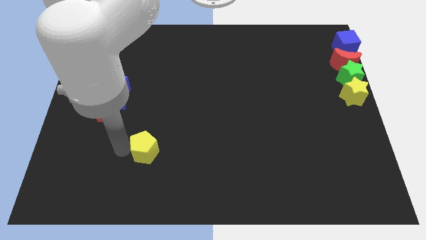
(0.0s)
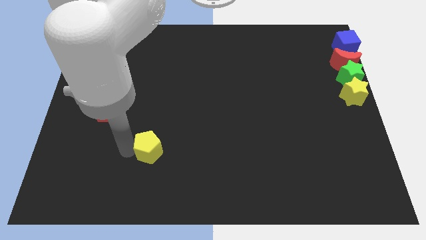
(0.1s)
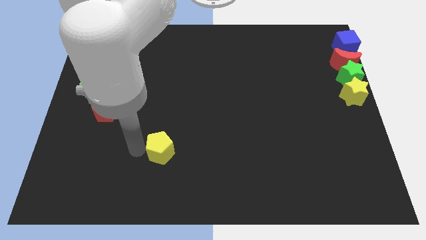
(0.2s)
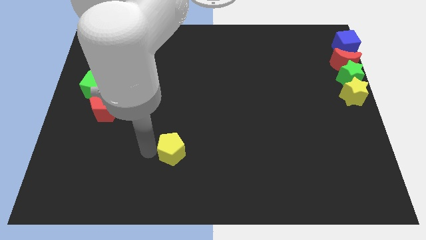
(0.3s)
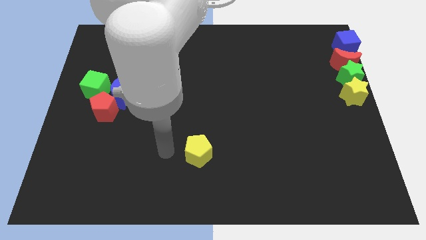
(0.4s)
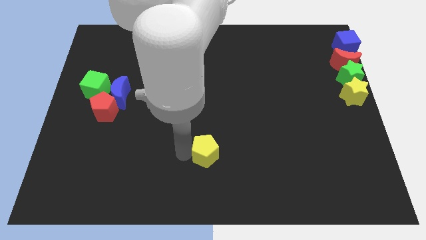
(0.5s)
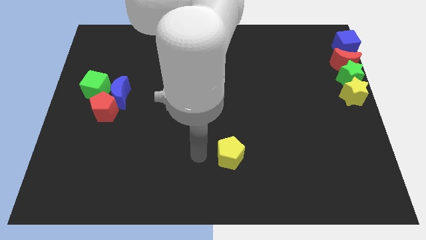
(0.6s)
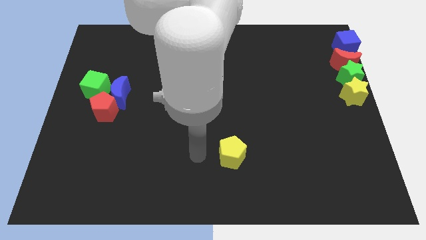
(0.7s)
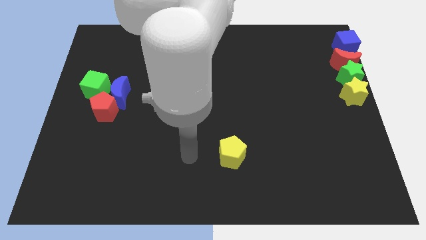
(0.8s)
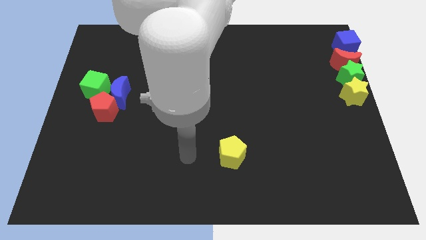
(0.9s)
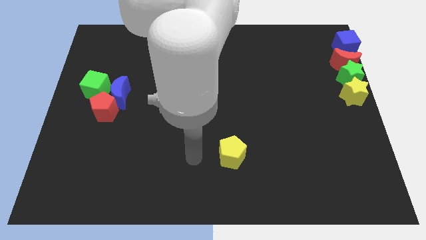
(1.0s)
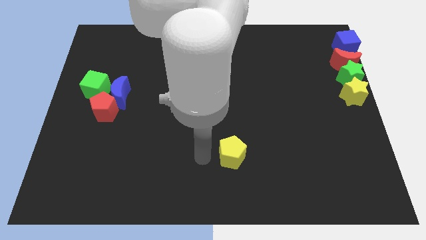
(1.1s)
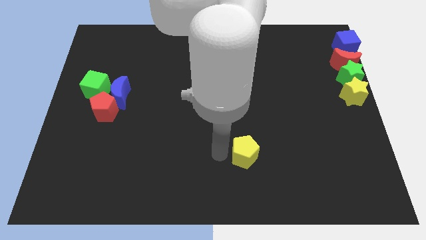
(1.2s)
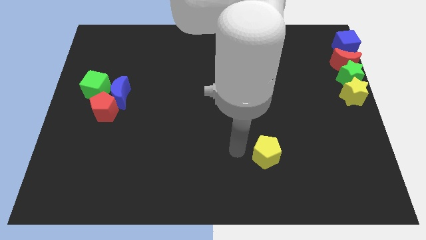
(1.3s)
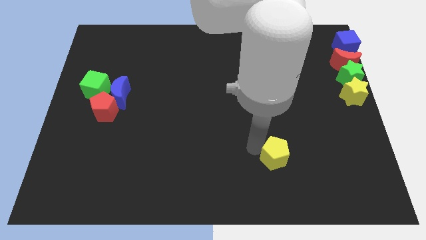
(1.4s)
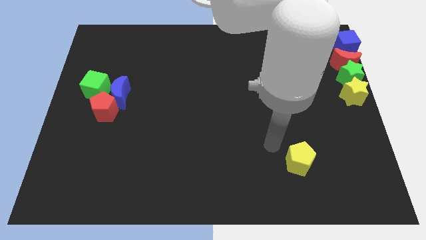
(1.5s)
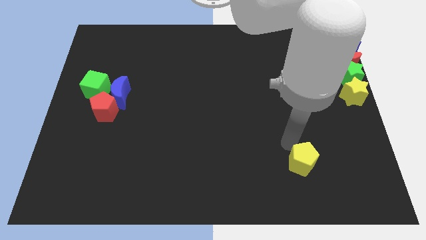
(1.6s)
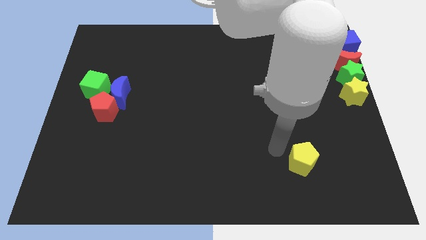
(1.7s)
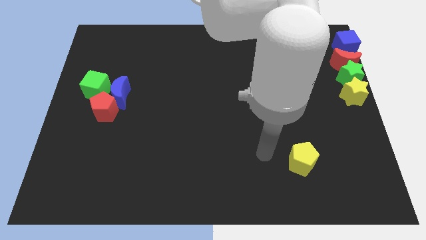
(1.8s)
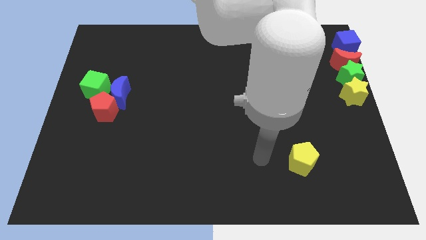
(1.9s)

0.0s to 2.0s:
drag yellow pentagon towards right side of the board

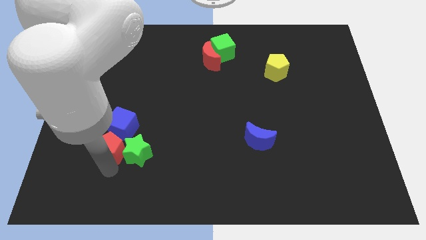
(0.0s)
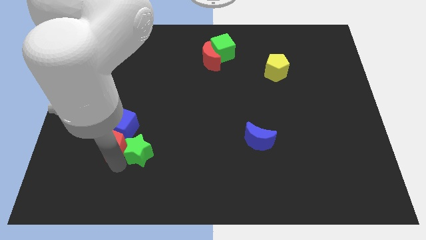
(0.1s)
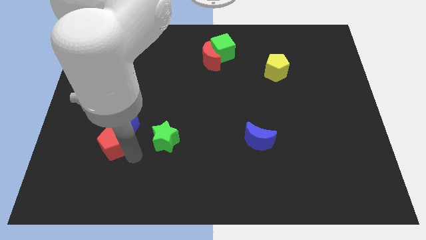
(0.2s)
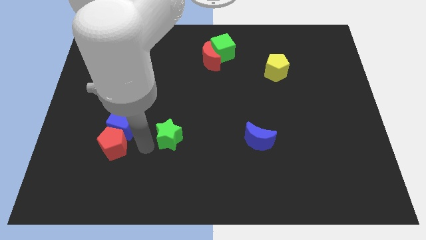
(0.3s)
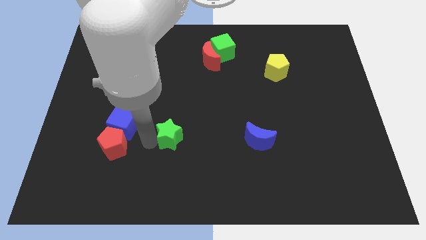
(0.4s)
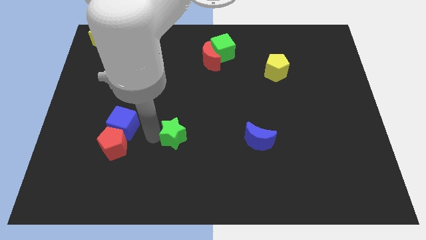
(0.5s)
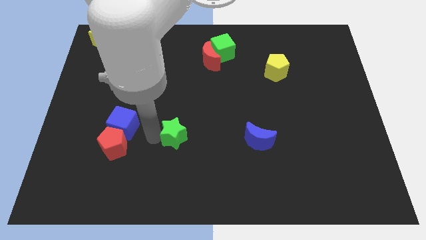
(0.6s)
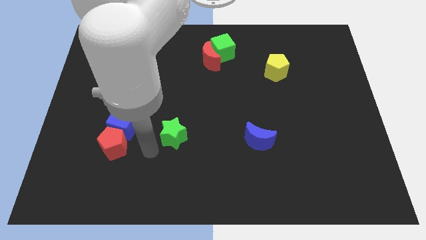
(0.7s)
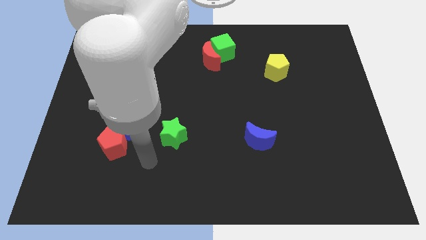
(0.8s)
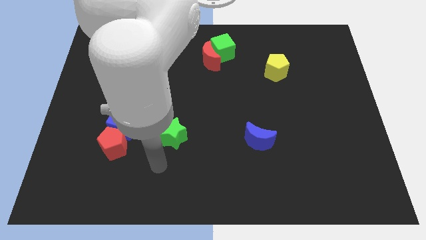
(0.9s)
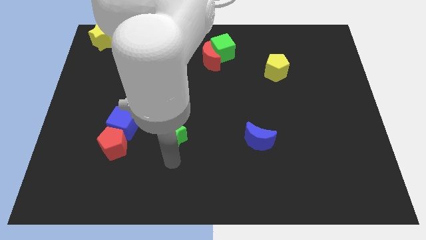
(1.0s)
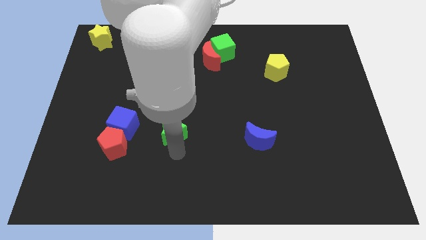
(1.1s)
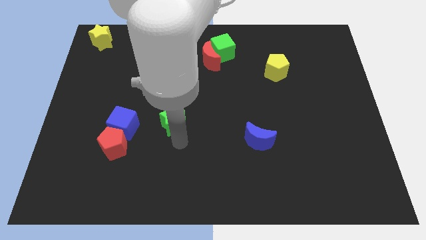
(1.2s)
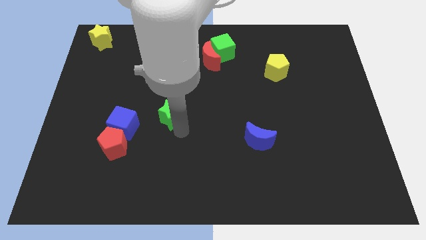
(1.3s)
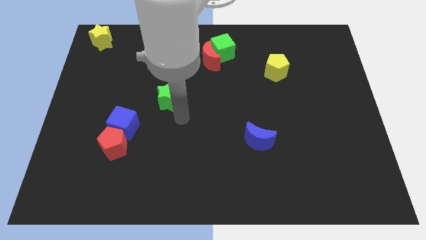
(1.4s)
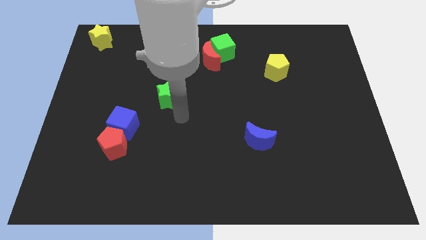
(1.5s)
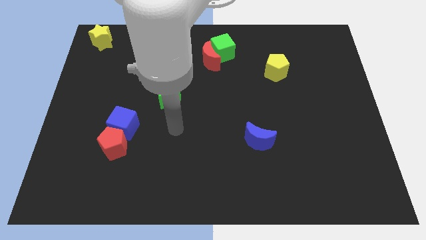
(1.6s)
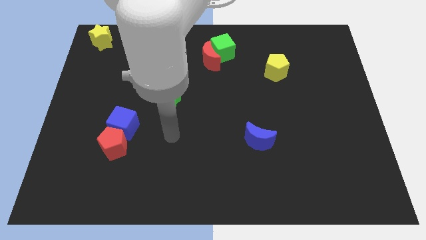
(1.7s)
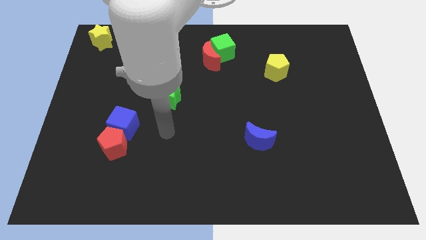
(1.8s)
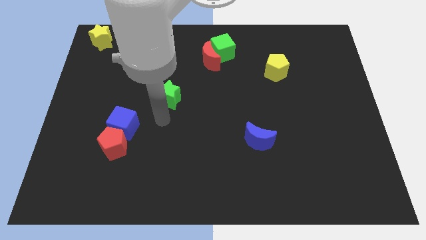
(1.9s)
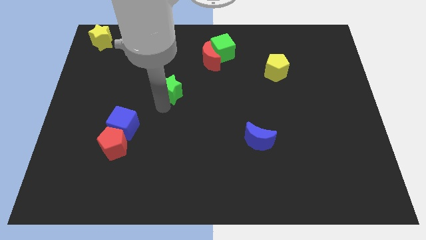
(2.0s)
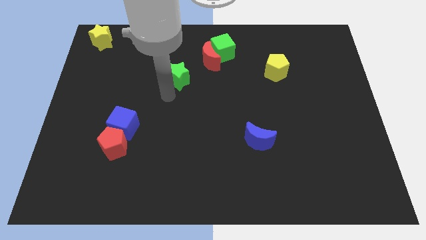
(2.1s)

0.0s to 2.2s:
move the green star between red moon and blue cube

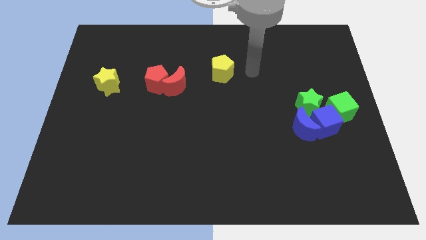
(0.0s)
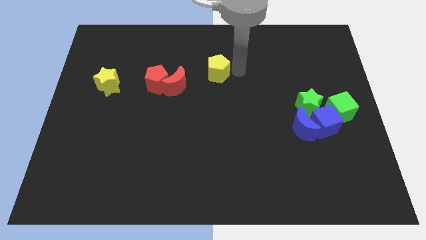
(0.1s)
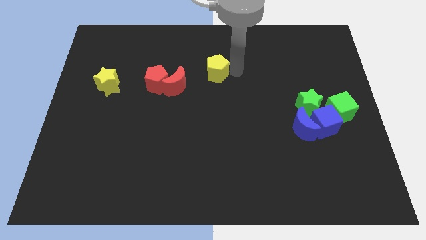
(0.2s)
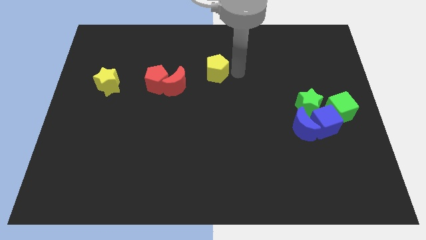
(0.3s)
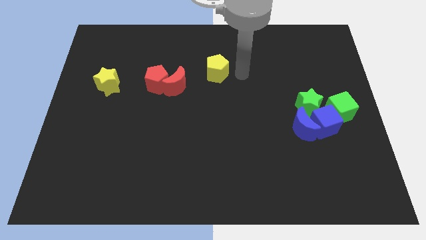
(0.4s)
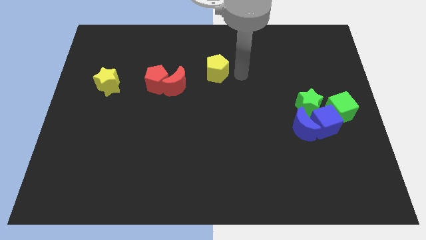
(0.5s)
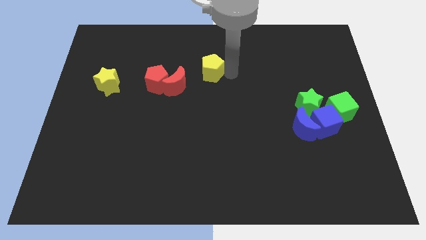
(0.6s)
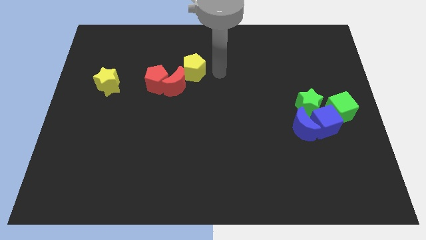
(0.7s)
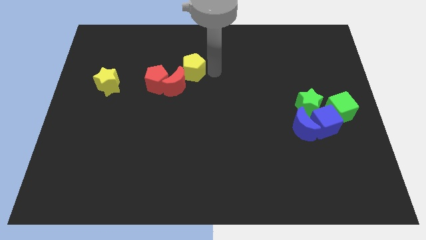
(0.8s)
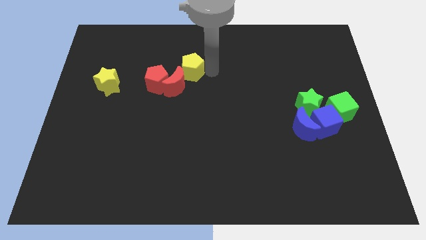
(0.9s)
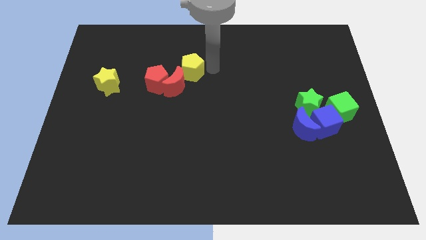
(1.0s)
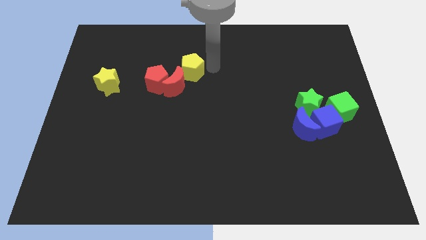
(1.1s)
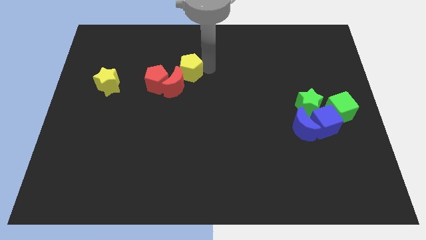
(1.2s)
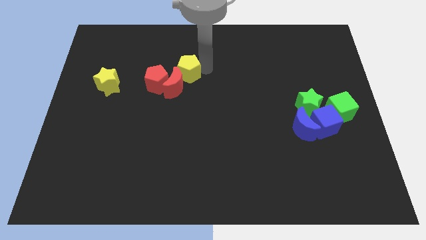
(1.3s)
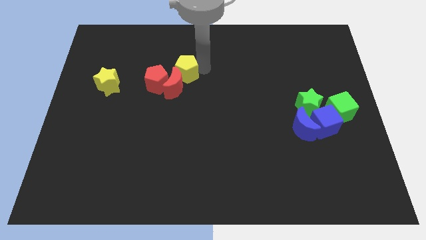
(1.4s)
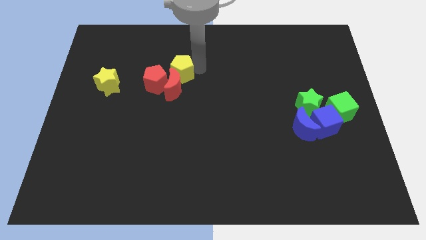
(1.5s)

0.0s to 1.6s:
place the yellow pentagon above the red moon

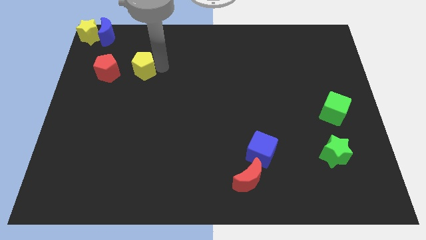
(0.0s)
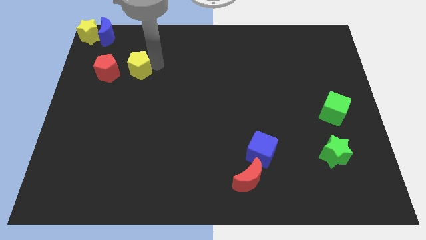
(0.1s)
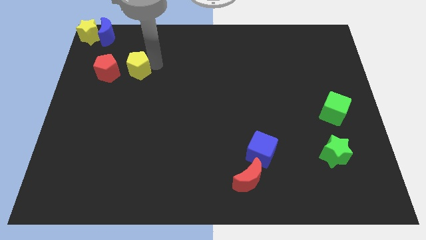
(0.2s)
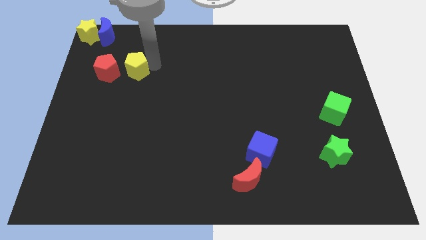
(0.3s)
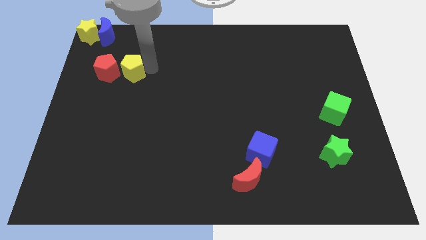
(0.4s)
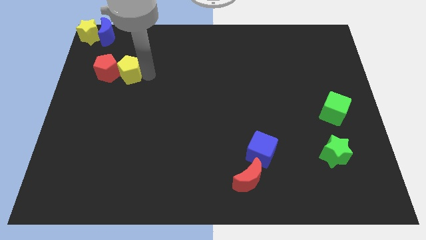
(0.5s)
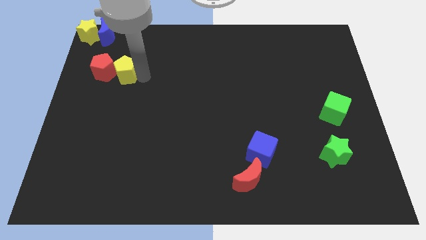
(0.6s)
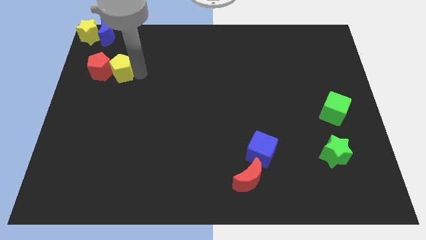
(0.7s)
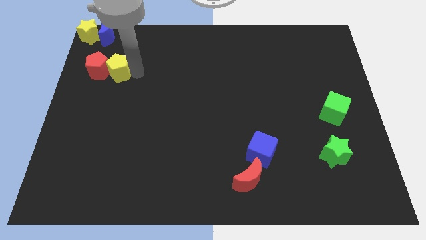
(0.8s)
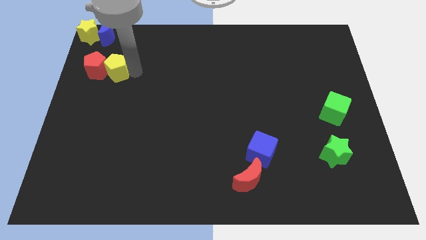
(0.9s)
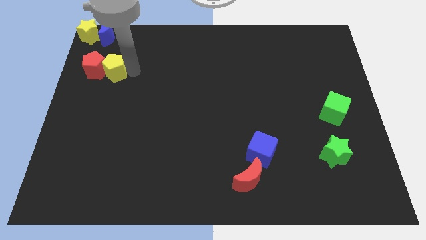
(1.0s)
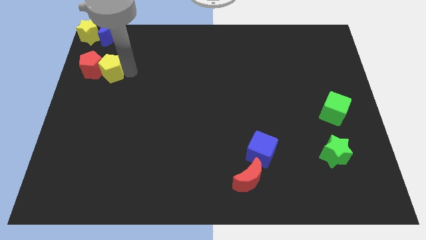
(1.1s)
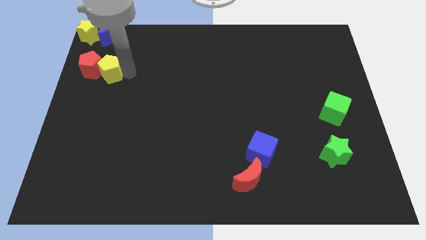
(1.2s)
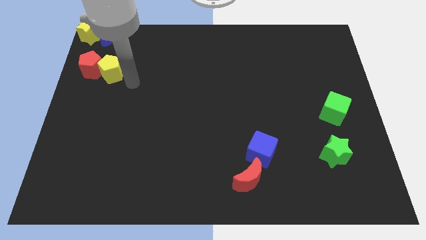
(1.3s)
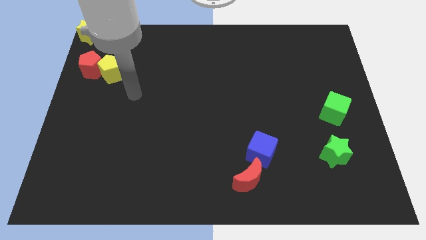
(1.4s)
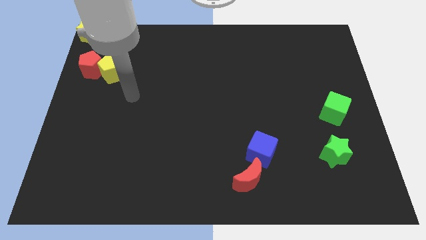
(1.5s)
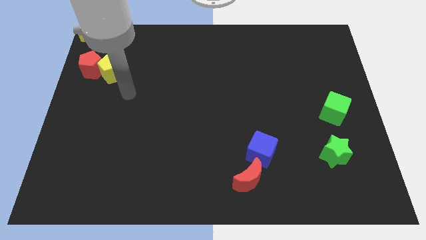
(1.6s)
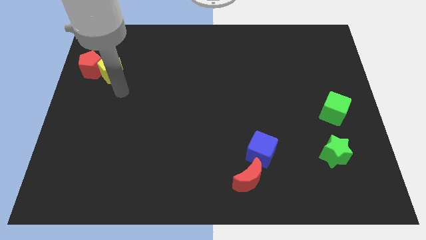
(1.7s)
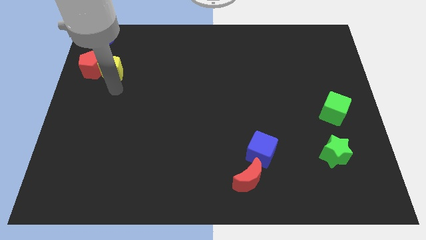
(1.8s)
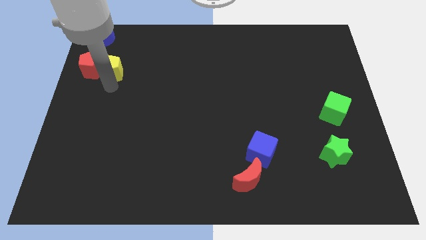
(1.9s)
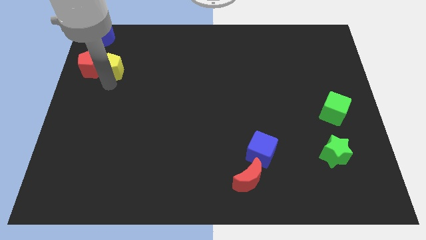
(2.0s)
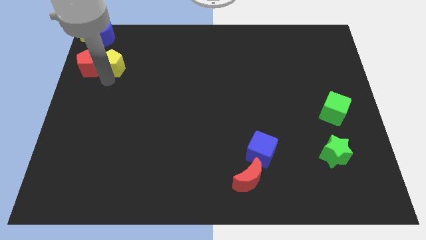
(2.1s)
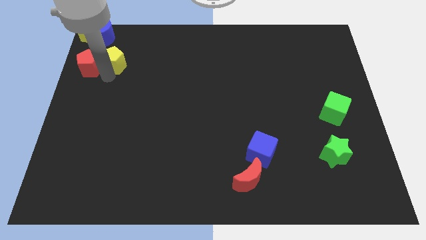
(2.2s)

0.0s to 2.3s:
push the yellow pentagon into the red pentagon

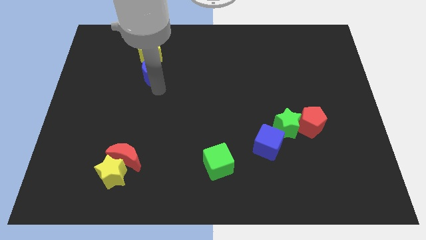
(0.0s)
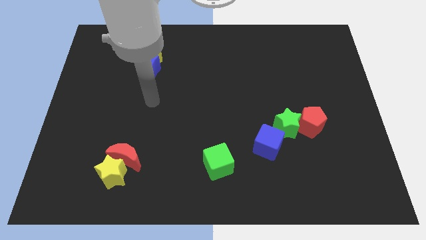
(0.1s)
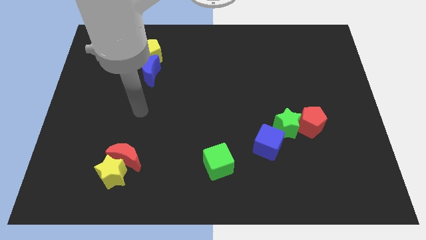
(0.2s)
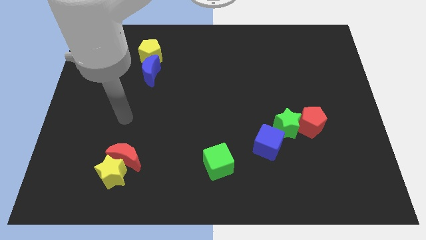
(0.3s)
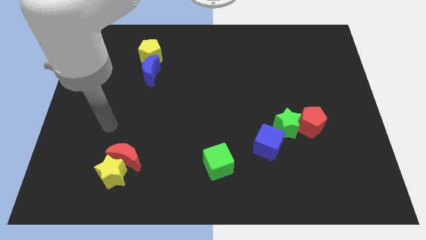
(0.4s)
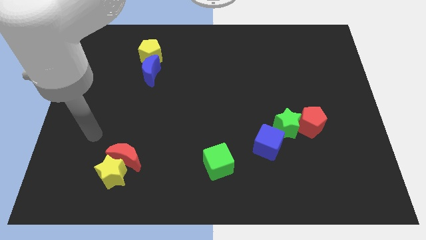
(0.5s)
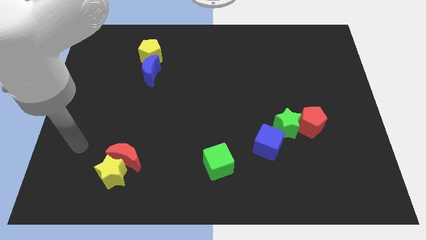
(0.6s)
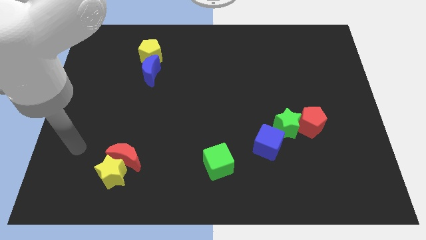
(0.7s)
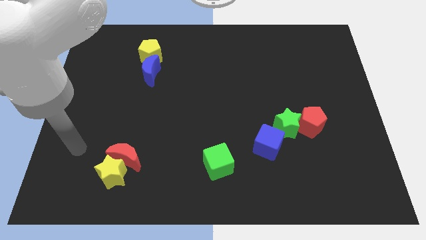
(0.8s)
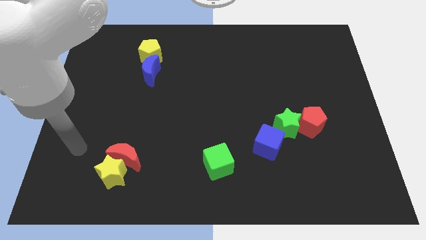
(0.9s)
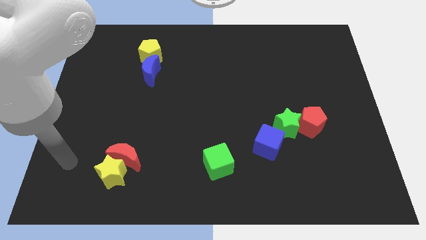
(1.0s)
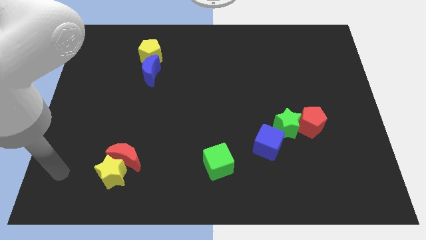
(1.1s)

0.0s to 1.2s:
put the arm to the left of the yellow star
